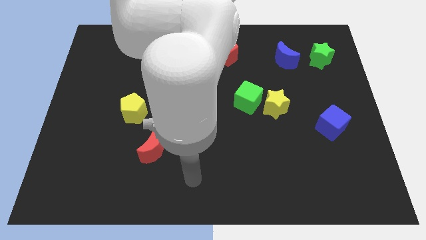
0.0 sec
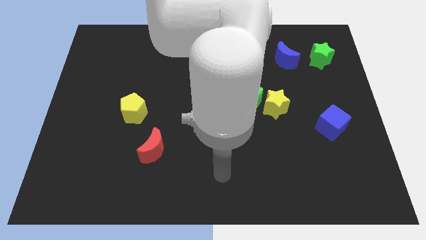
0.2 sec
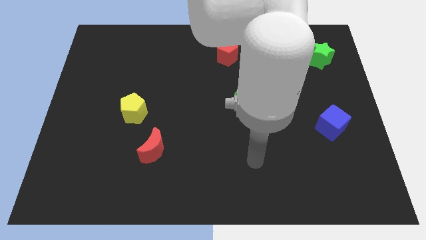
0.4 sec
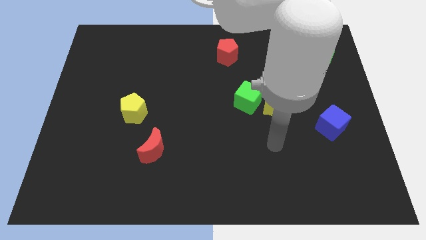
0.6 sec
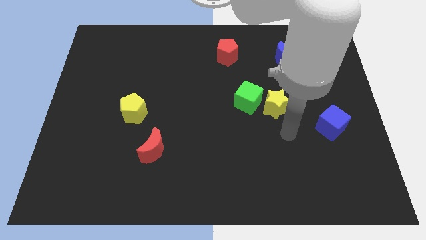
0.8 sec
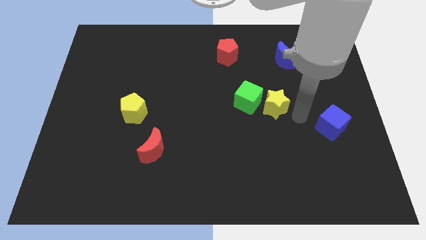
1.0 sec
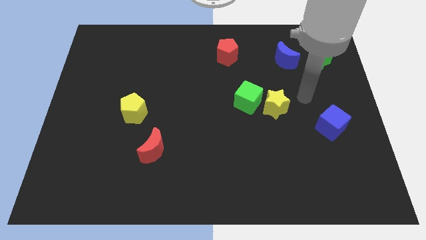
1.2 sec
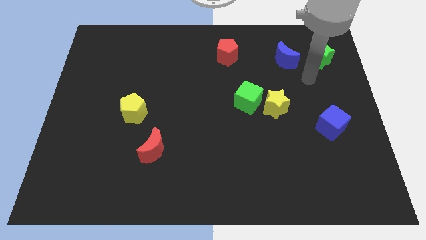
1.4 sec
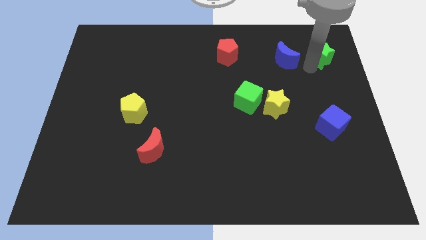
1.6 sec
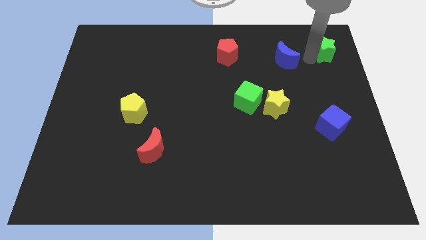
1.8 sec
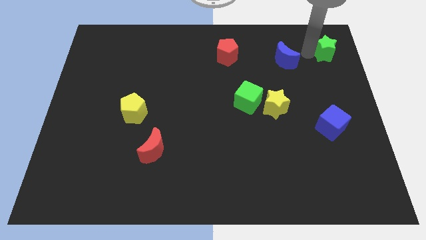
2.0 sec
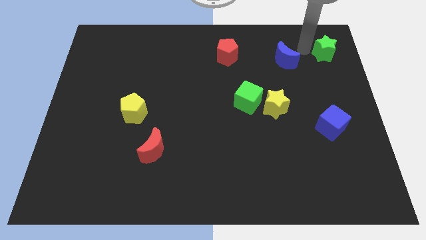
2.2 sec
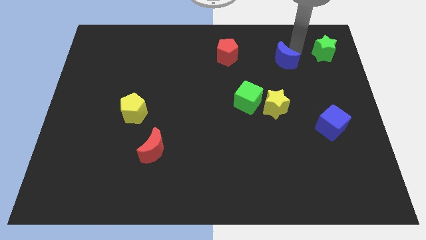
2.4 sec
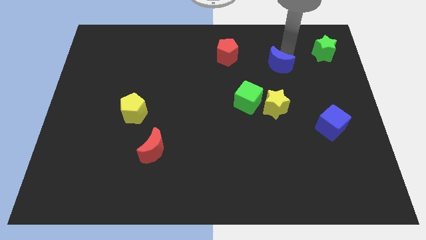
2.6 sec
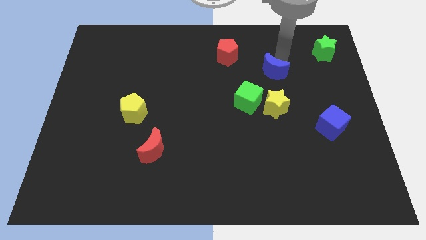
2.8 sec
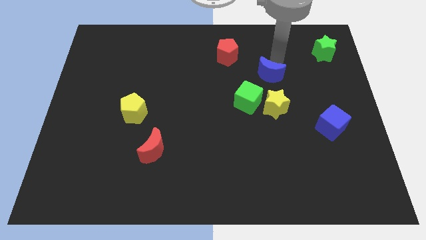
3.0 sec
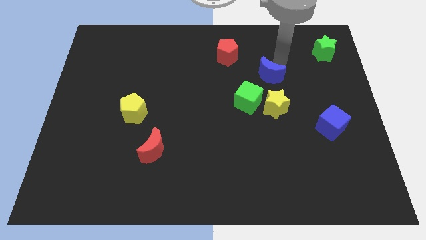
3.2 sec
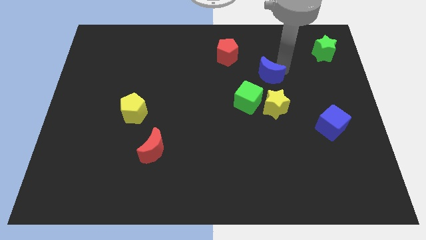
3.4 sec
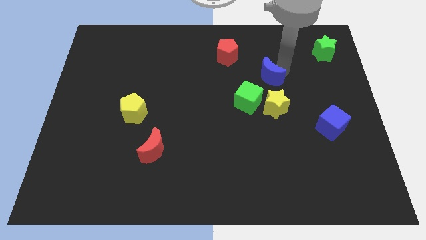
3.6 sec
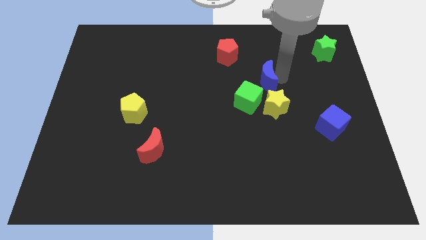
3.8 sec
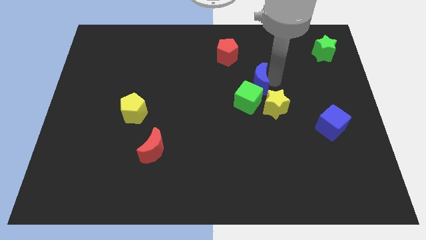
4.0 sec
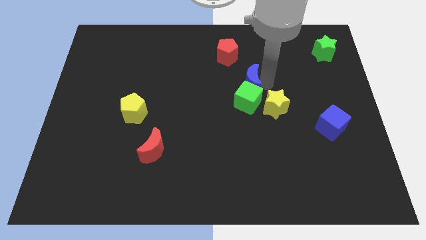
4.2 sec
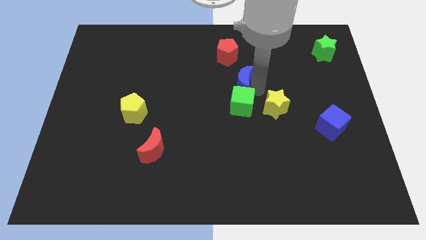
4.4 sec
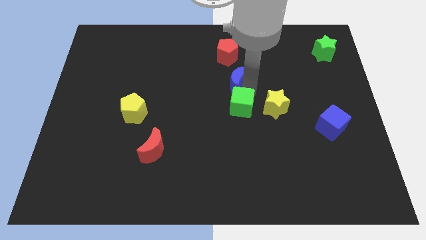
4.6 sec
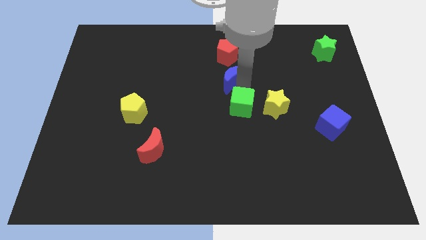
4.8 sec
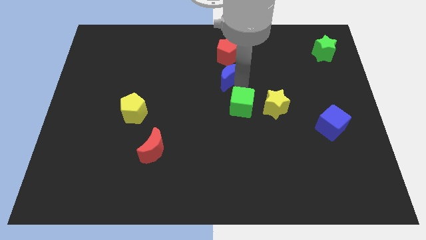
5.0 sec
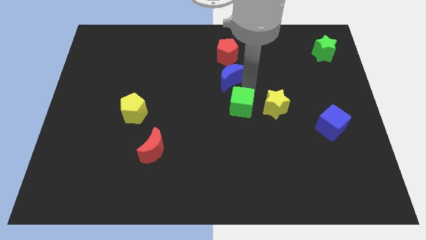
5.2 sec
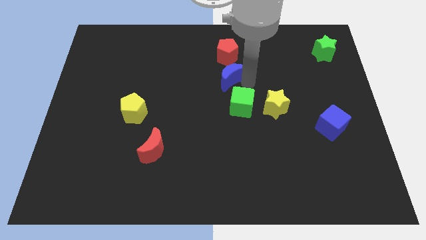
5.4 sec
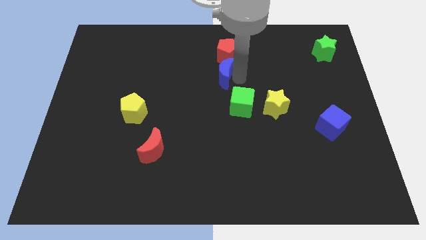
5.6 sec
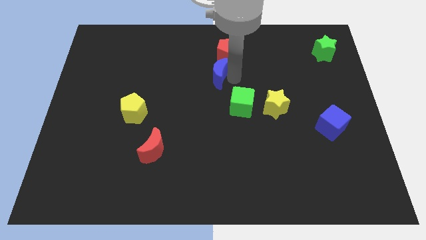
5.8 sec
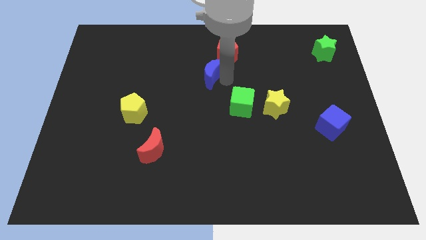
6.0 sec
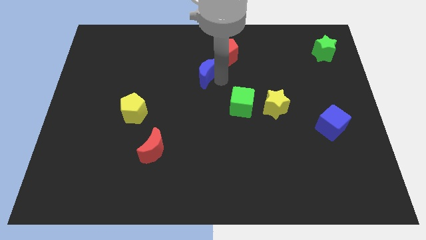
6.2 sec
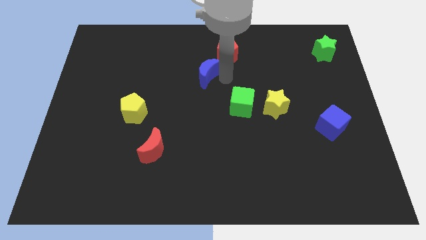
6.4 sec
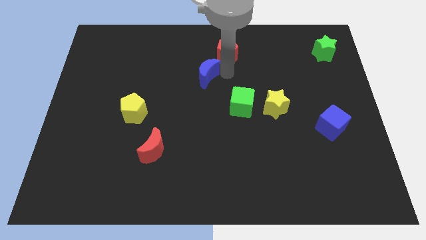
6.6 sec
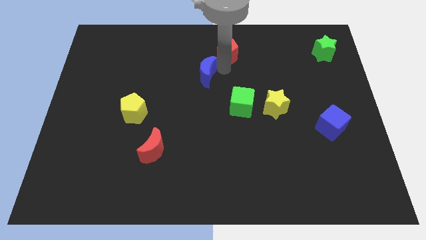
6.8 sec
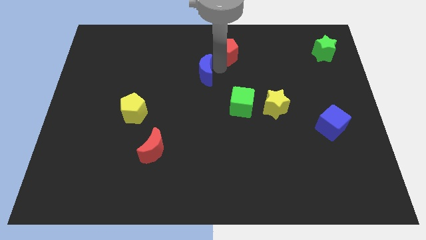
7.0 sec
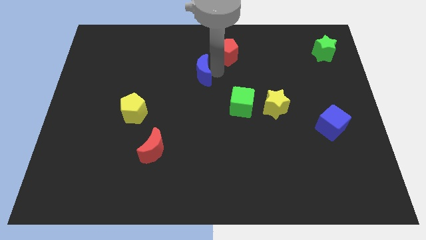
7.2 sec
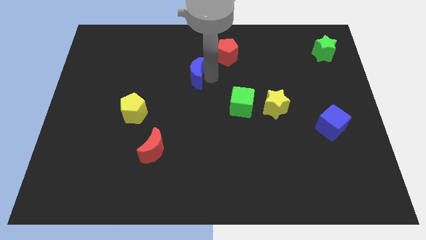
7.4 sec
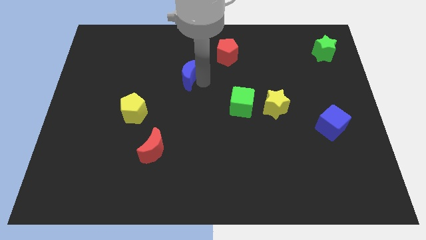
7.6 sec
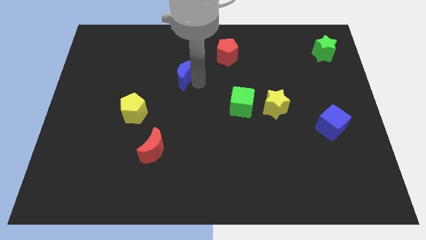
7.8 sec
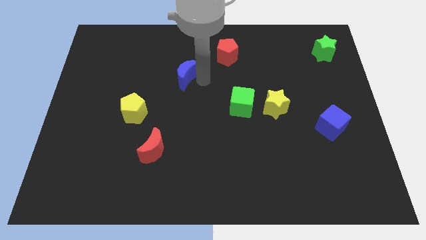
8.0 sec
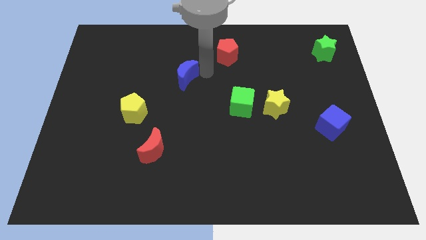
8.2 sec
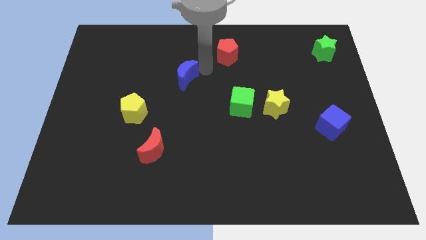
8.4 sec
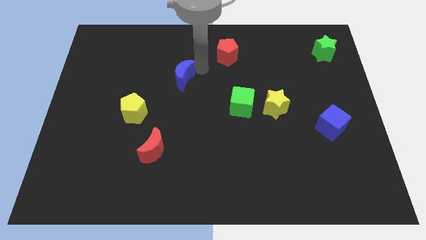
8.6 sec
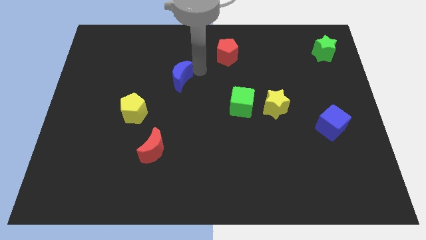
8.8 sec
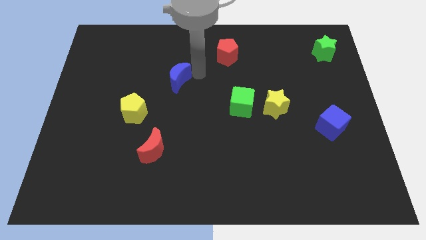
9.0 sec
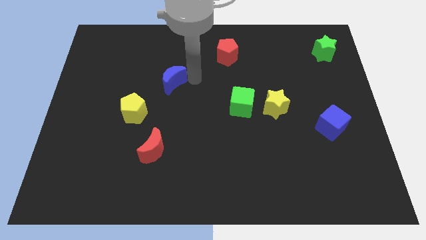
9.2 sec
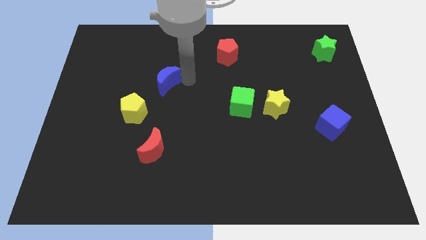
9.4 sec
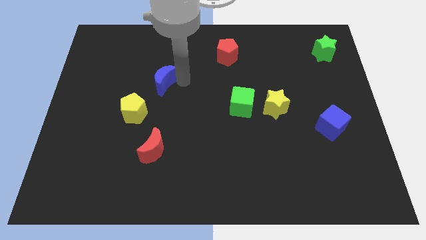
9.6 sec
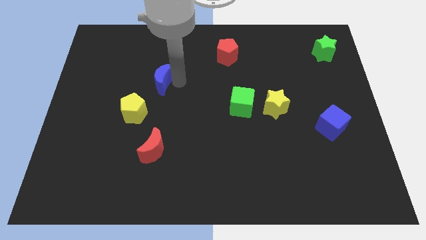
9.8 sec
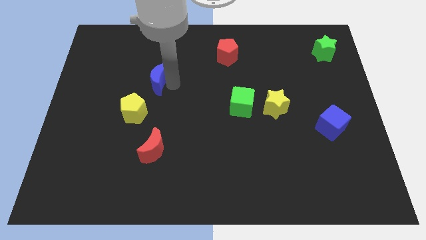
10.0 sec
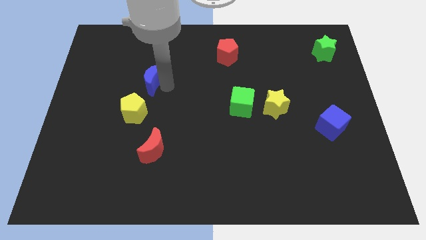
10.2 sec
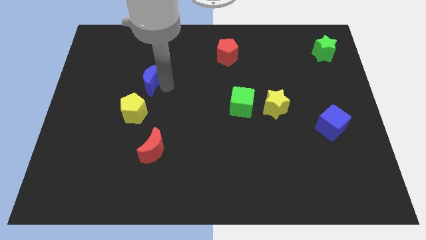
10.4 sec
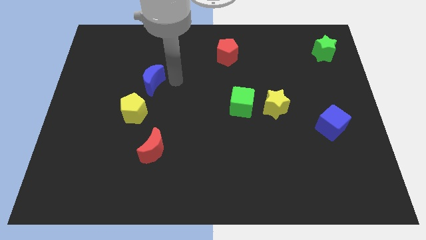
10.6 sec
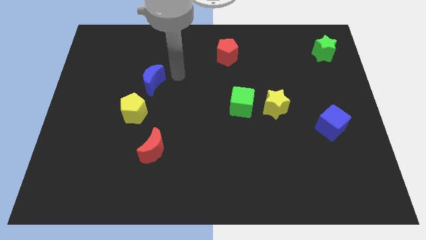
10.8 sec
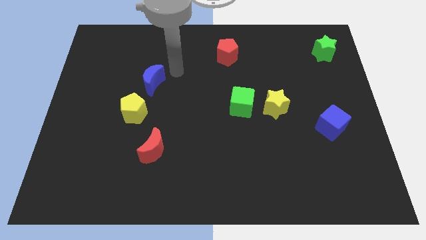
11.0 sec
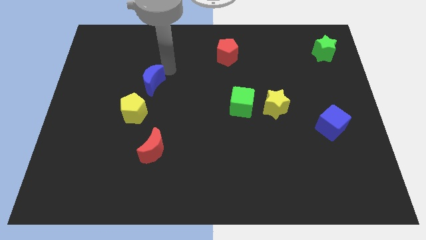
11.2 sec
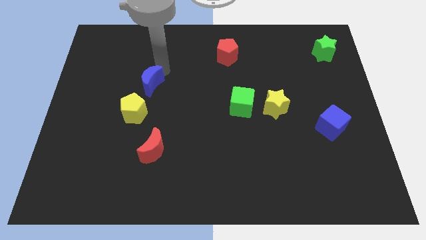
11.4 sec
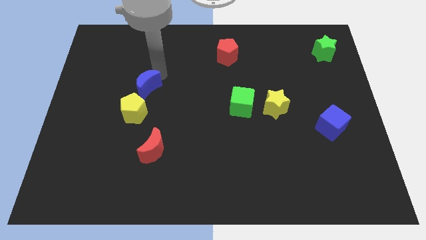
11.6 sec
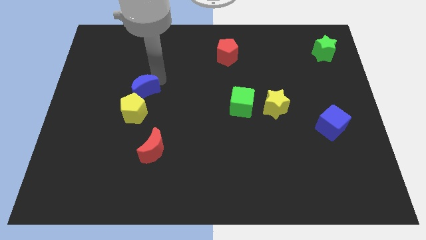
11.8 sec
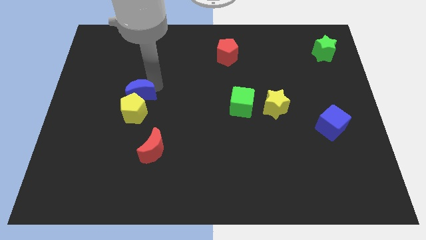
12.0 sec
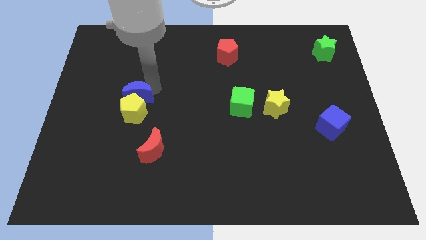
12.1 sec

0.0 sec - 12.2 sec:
put the blue moon to the yellow pentagon

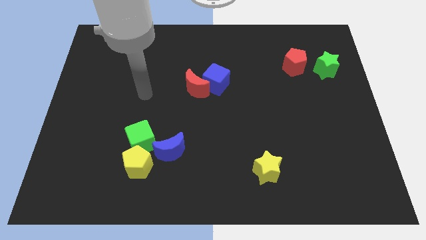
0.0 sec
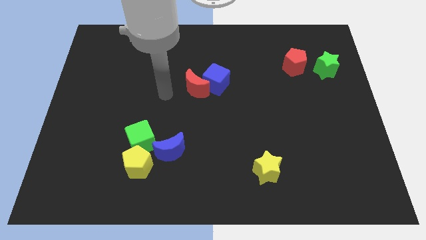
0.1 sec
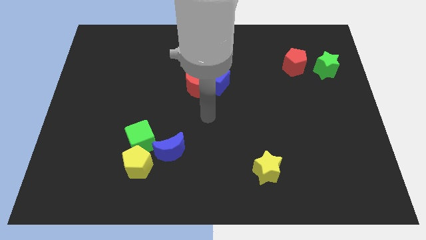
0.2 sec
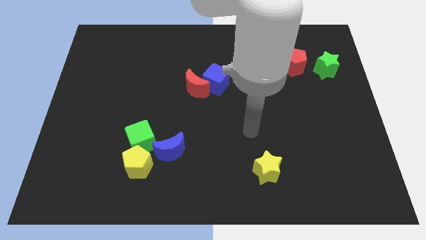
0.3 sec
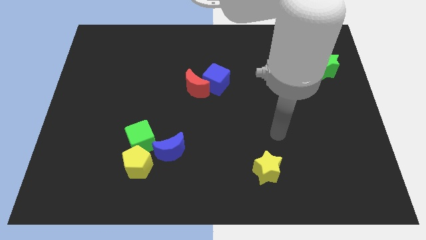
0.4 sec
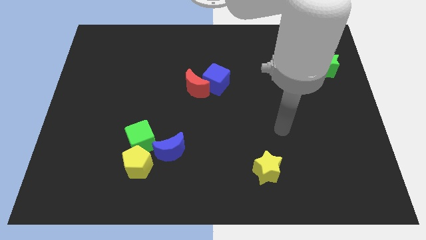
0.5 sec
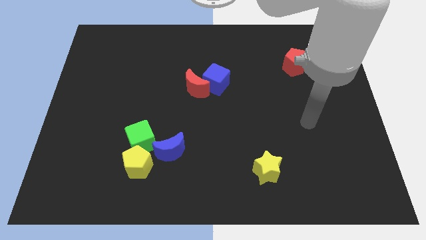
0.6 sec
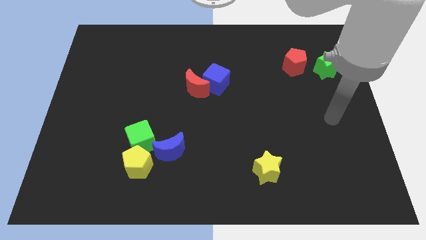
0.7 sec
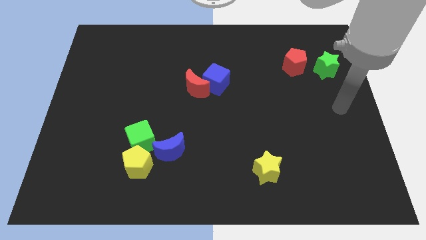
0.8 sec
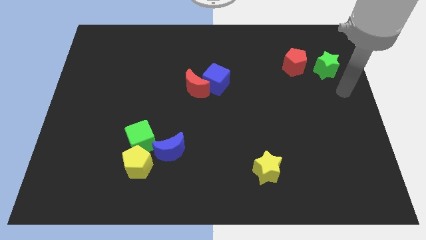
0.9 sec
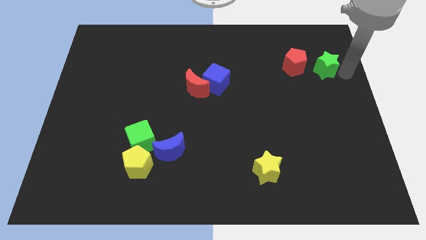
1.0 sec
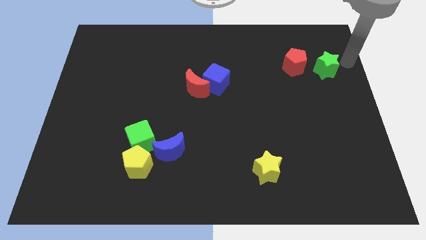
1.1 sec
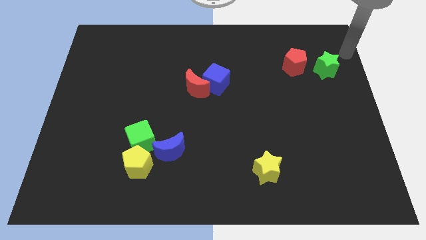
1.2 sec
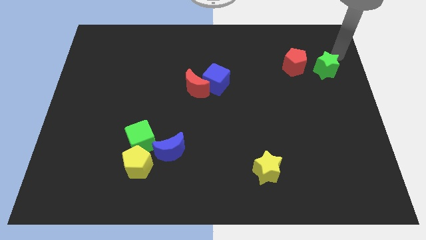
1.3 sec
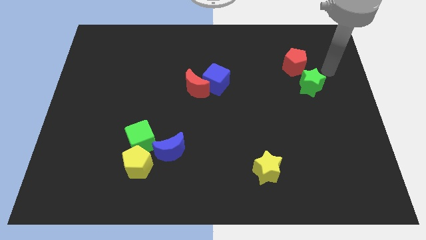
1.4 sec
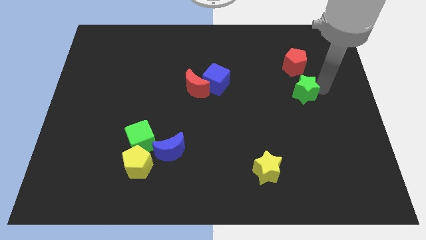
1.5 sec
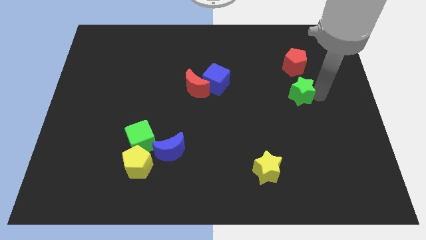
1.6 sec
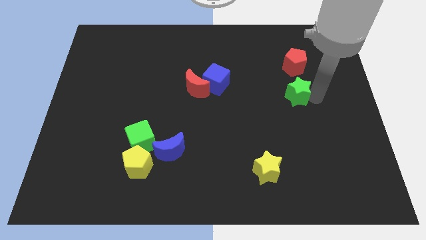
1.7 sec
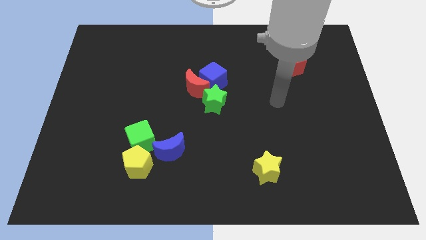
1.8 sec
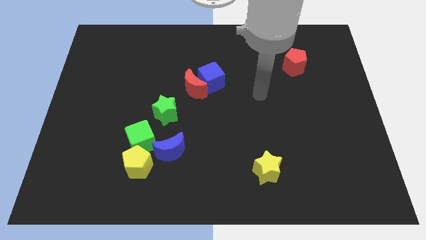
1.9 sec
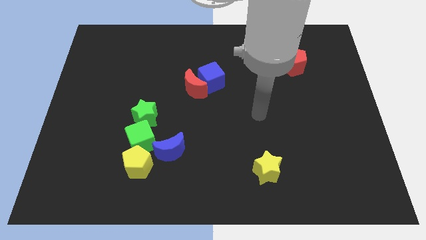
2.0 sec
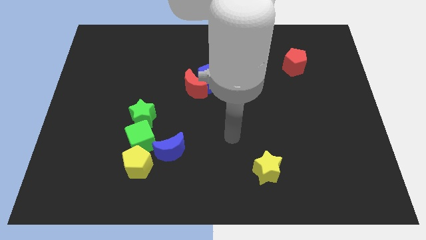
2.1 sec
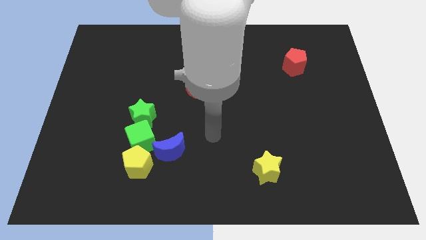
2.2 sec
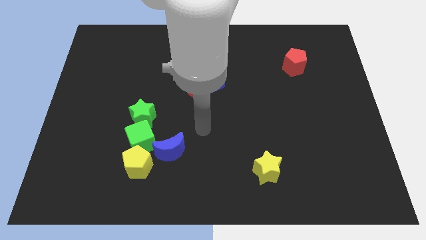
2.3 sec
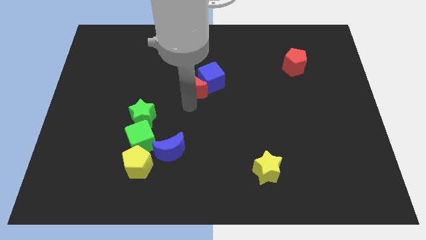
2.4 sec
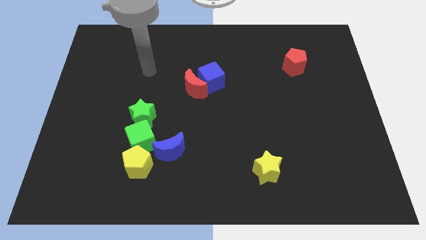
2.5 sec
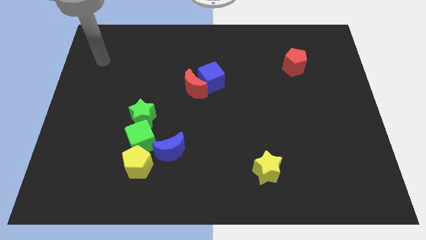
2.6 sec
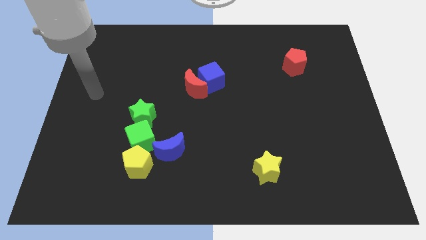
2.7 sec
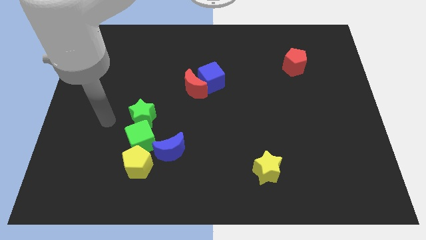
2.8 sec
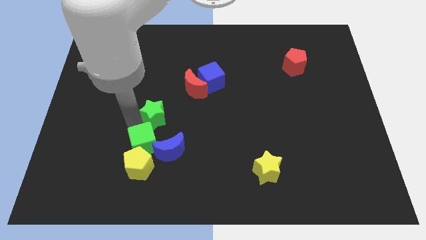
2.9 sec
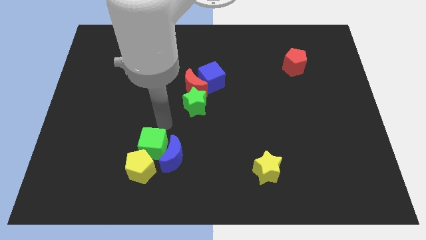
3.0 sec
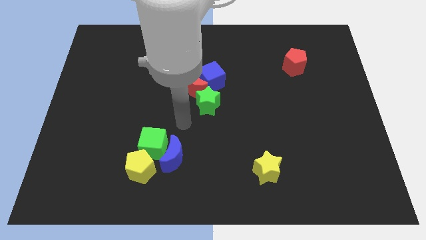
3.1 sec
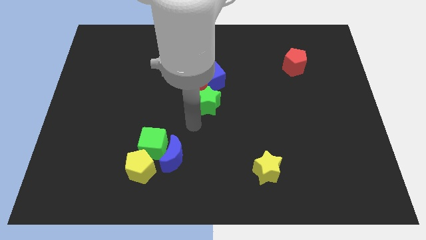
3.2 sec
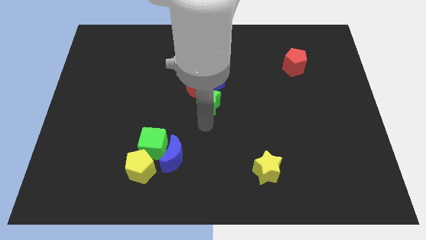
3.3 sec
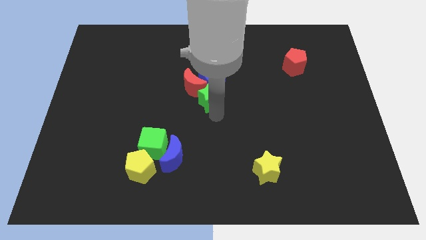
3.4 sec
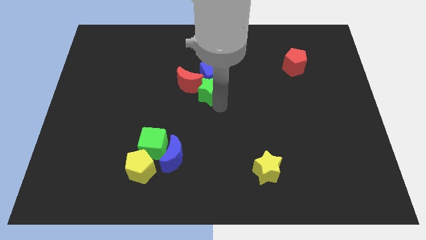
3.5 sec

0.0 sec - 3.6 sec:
put the green star towards the blue cube
